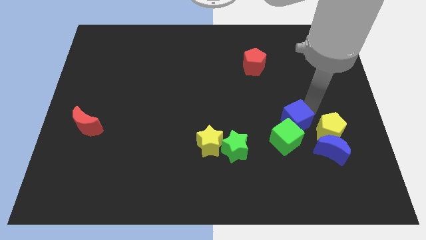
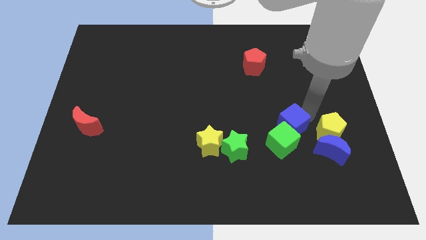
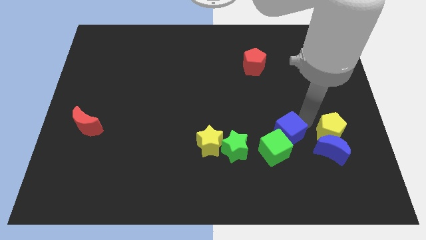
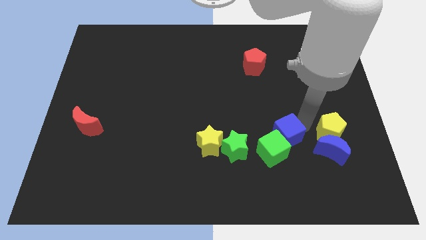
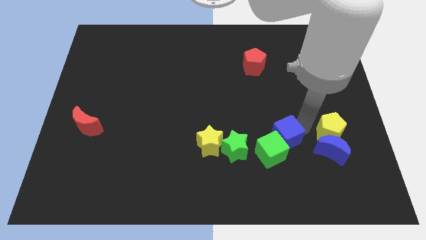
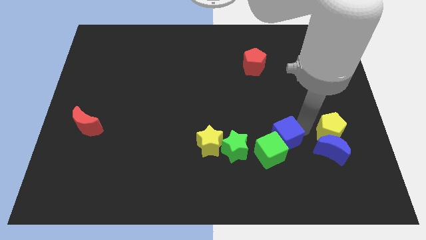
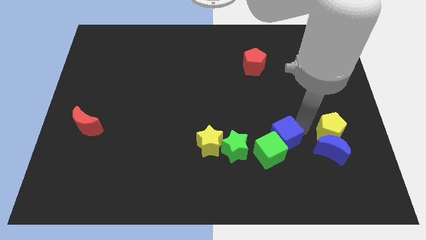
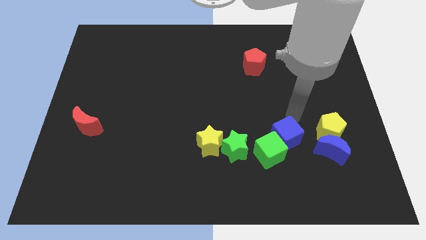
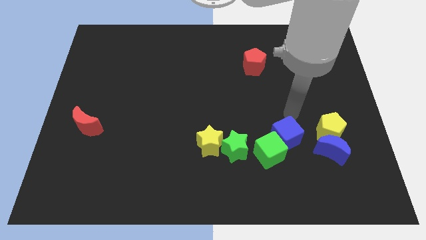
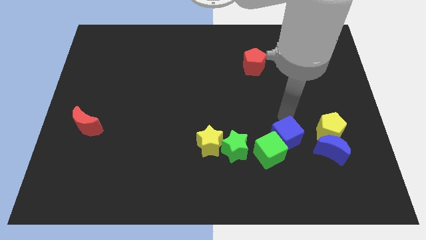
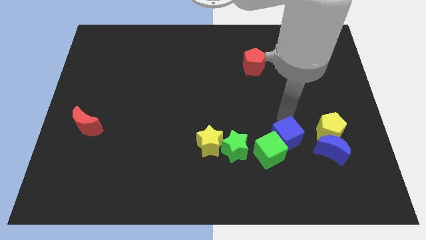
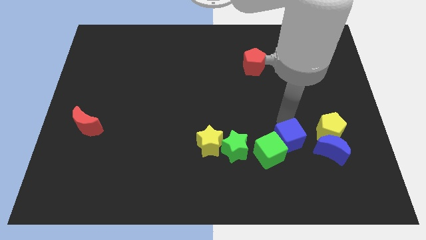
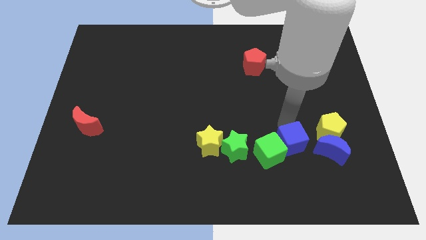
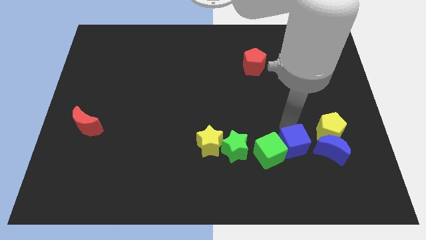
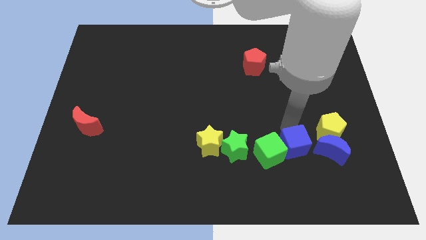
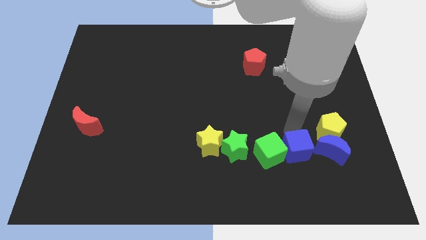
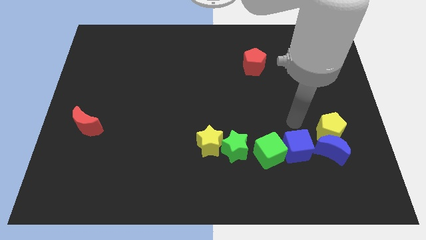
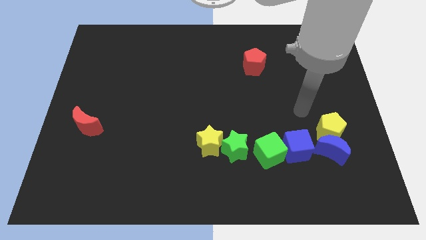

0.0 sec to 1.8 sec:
place the blue cube in between the green cube and the blue crescent

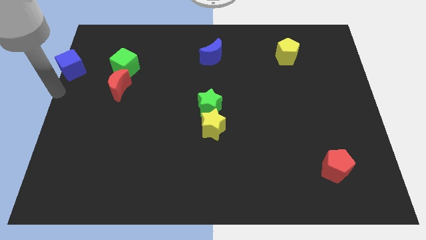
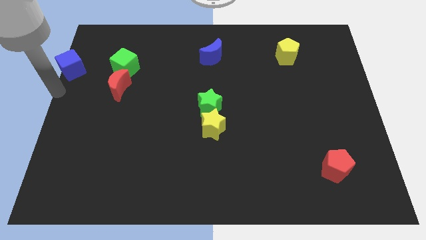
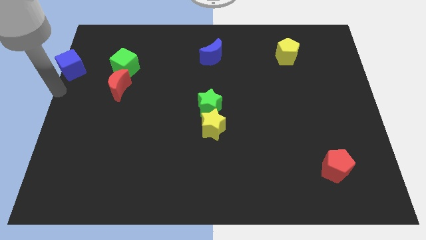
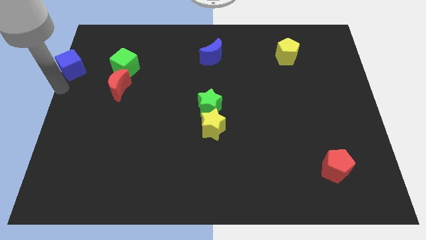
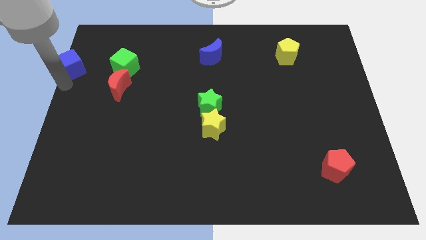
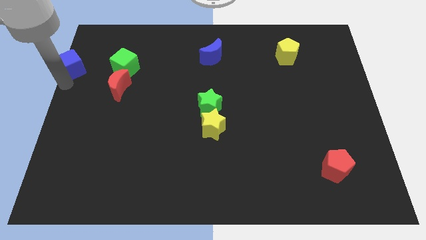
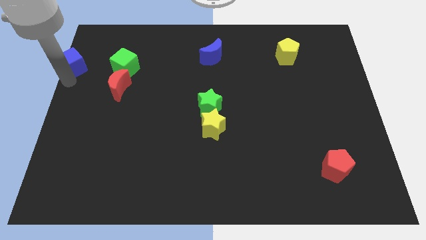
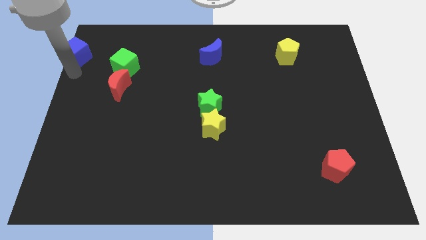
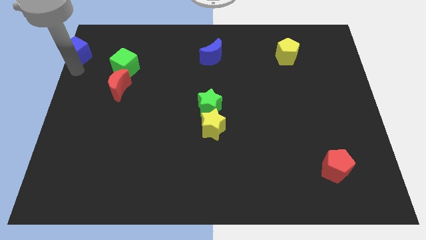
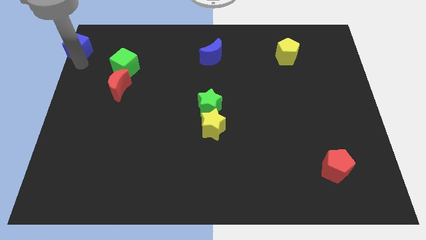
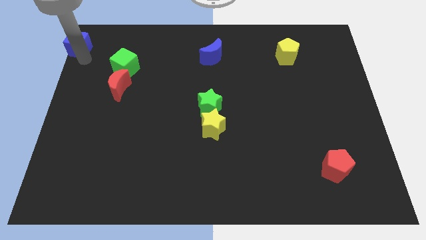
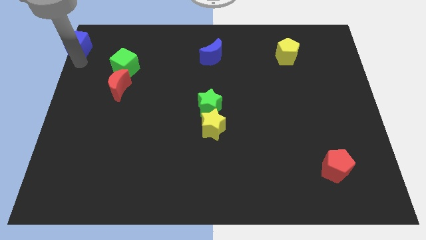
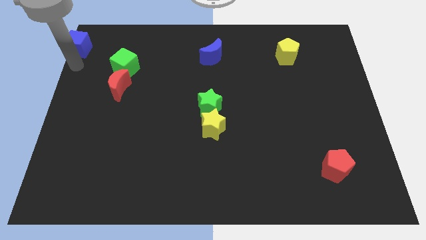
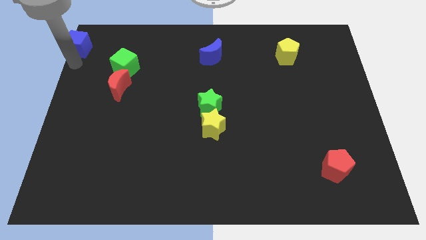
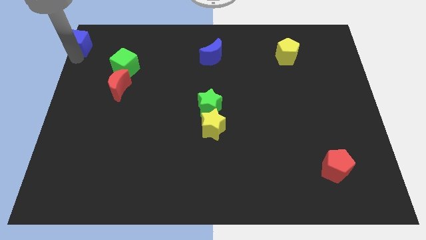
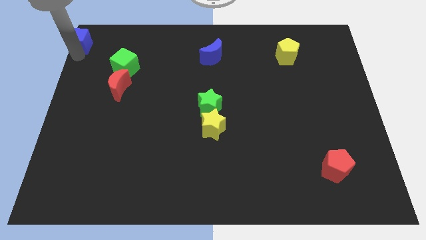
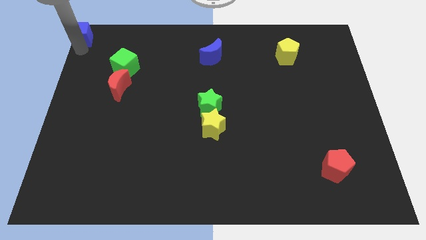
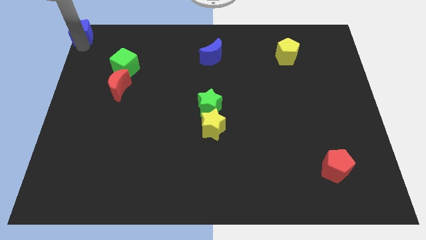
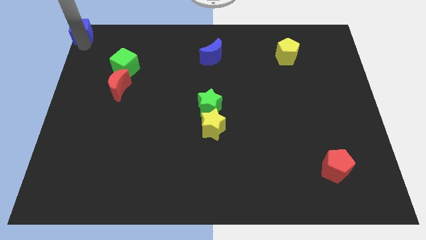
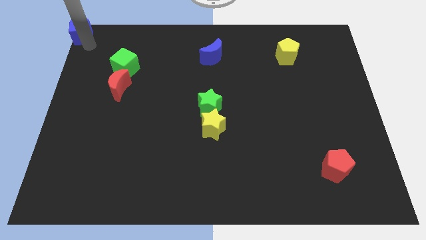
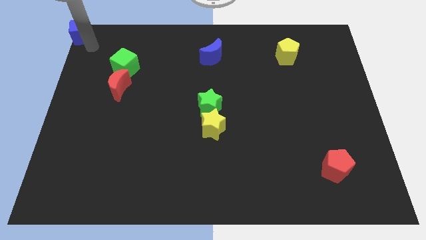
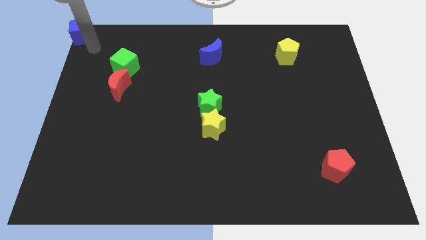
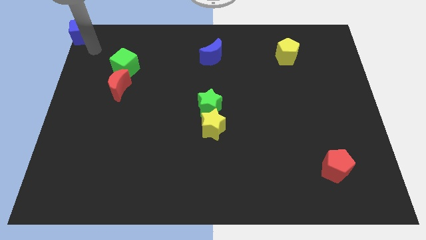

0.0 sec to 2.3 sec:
place blue cube towards top left corner

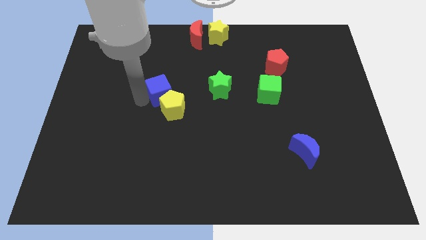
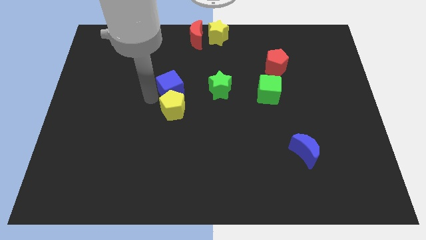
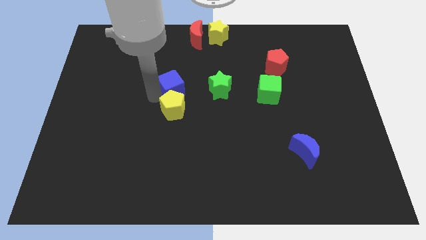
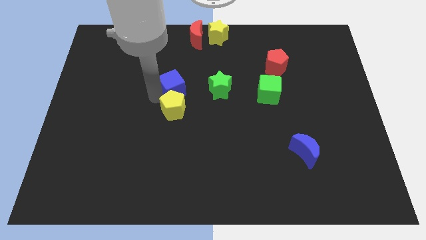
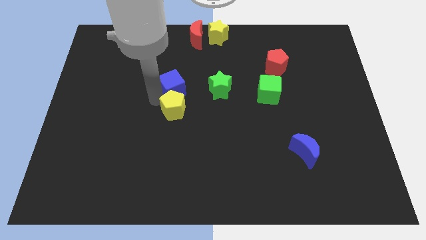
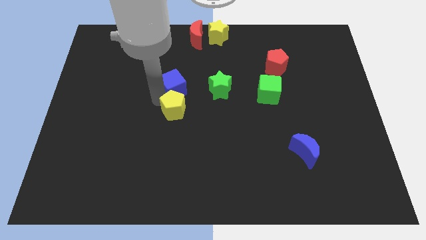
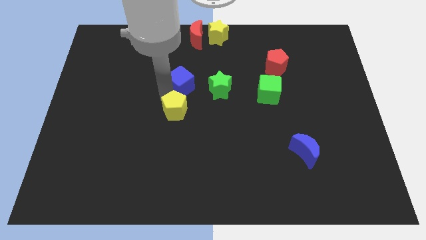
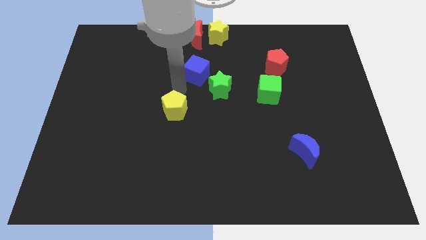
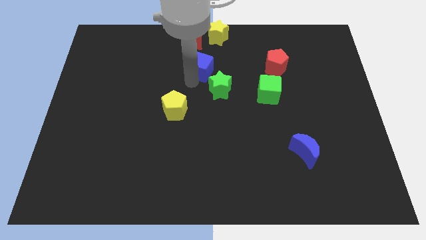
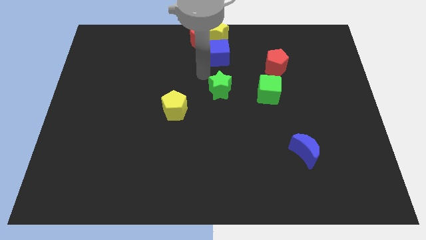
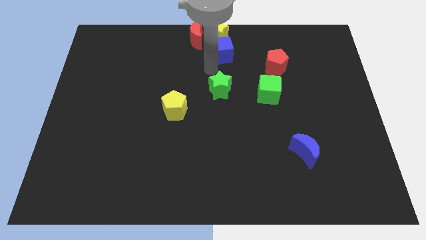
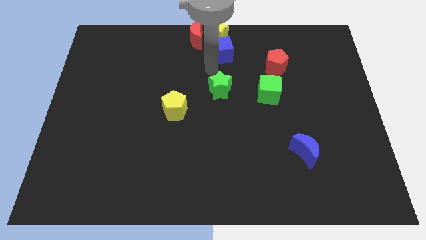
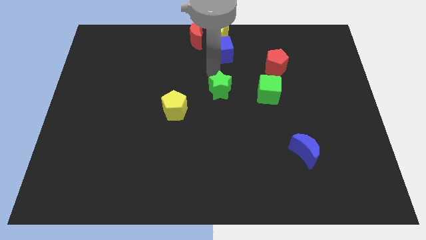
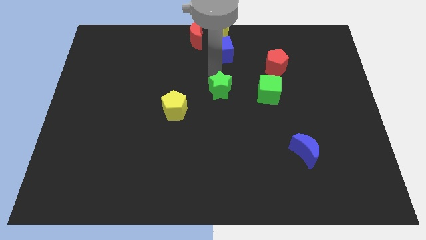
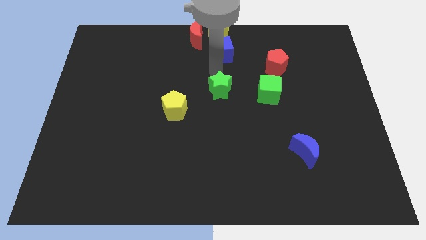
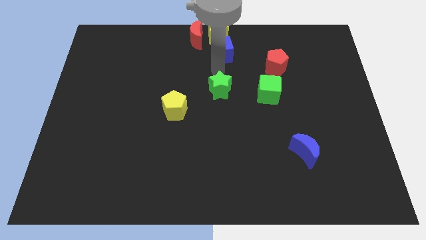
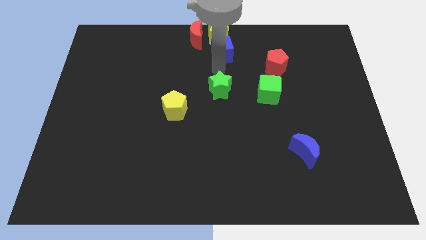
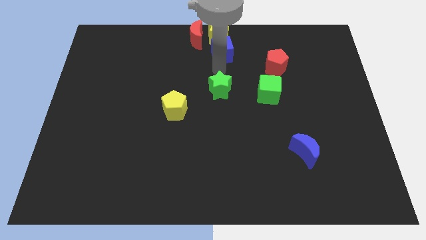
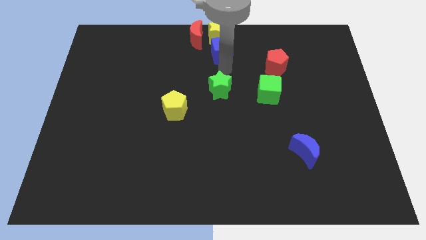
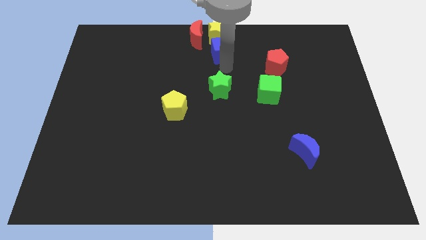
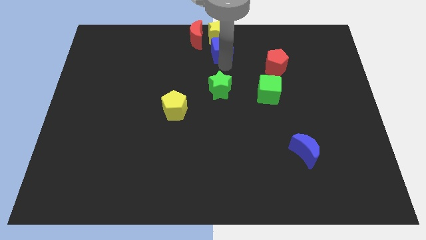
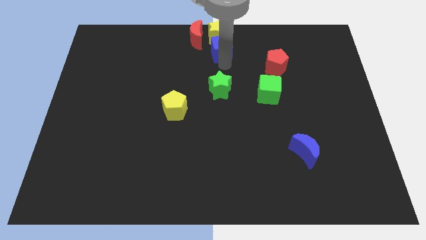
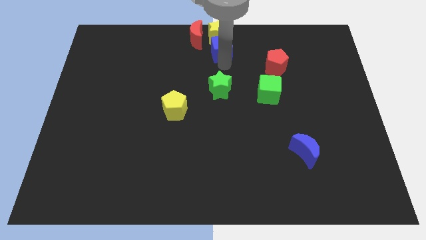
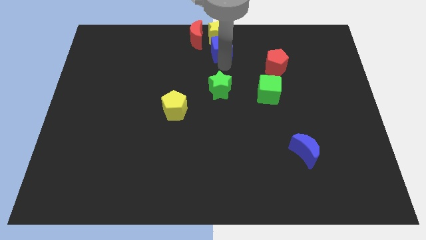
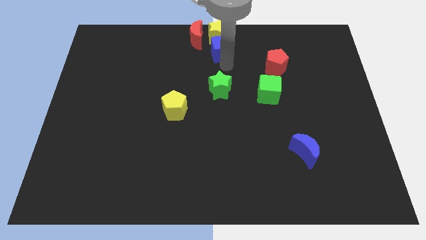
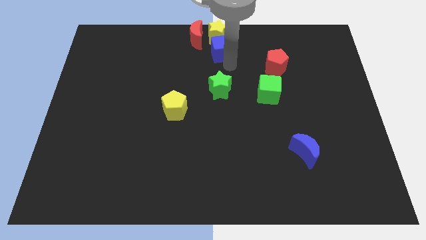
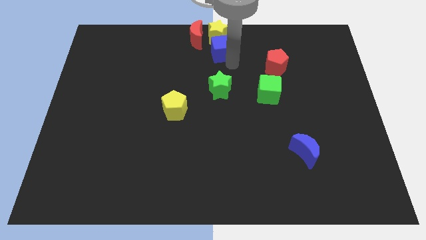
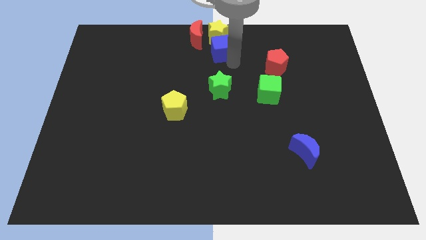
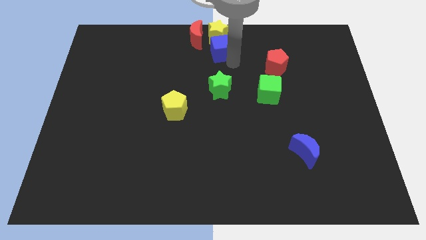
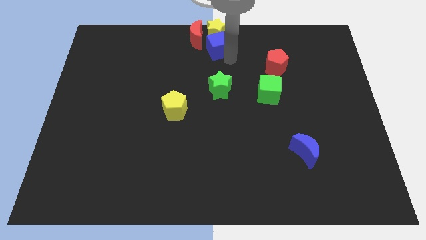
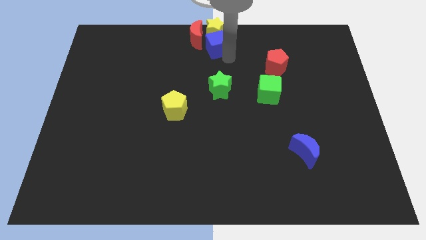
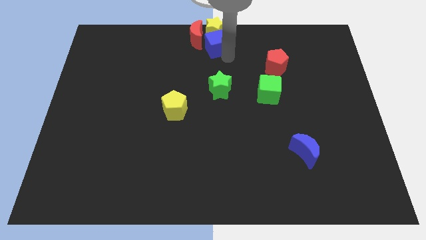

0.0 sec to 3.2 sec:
separate blue cube from yellow pentagon

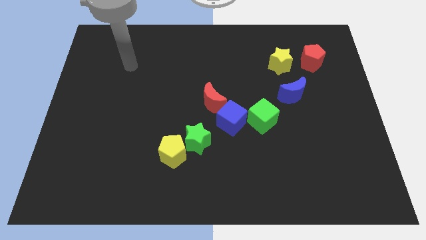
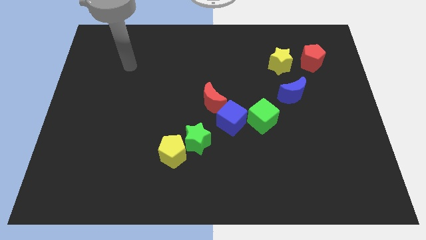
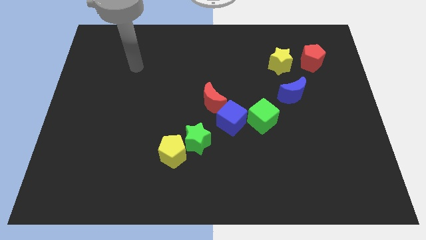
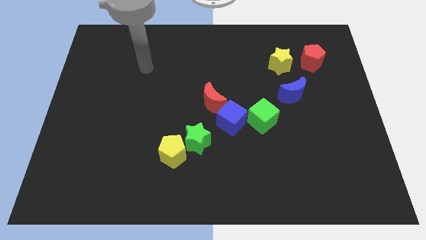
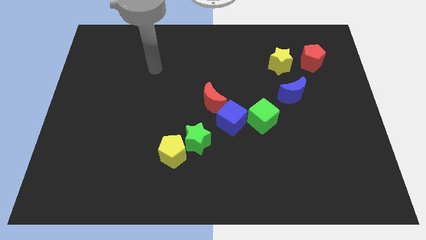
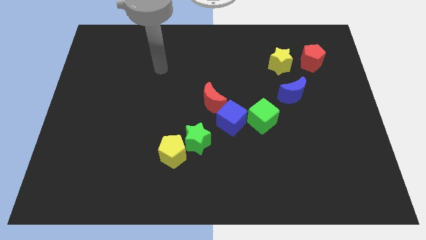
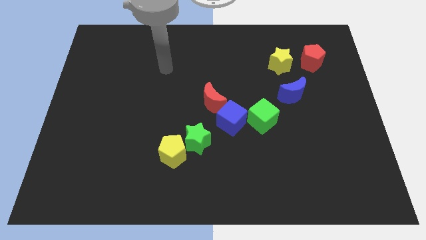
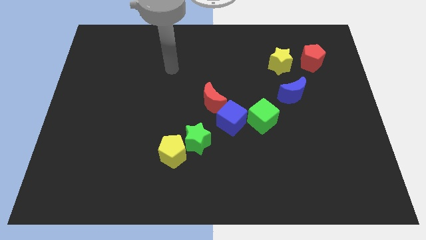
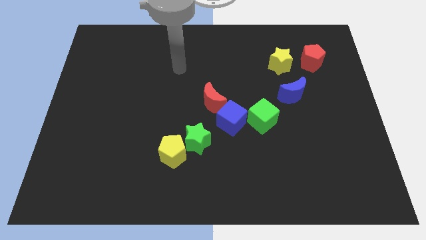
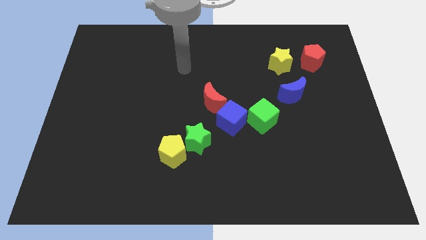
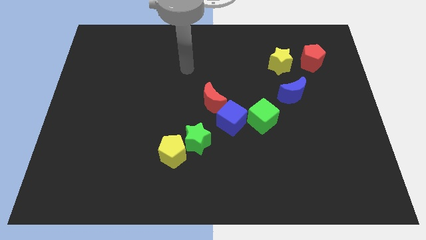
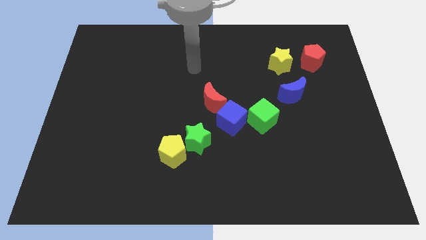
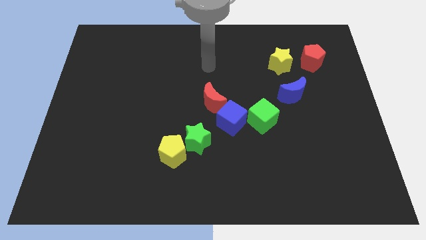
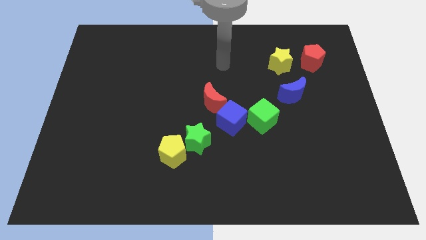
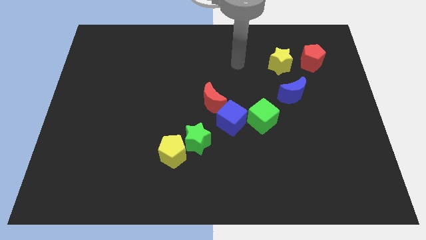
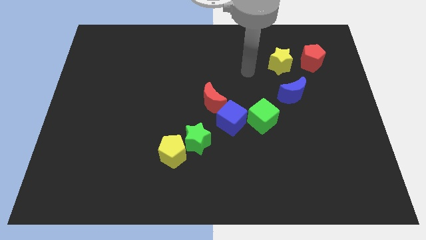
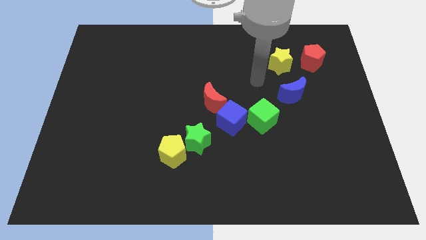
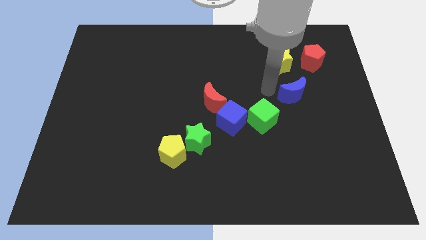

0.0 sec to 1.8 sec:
move your arm towards the blue crescent
